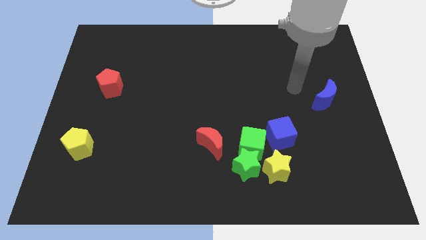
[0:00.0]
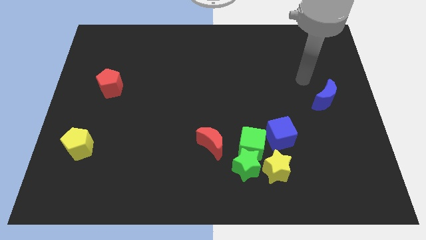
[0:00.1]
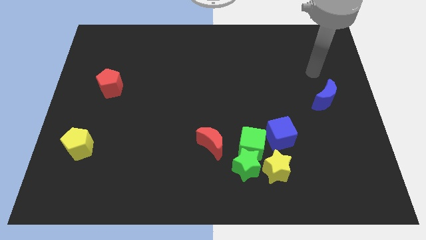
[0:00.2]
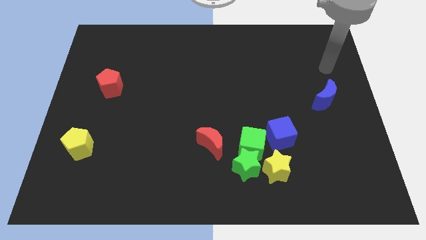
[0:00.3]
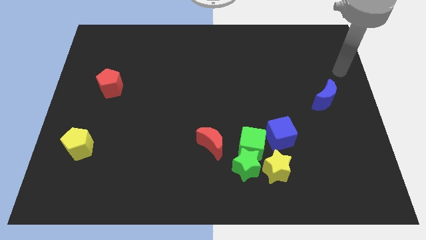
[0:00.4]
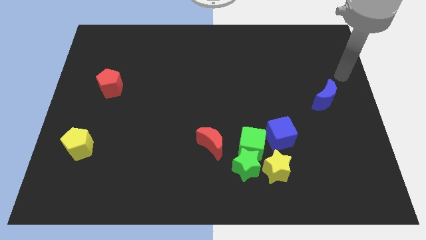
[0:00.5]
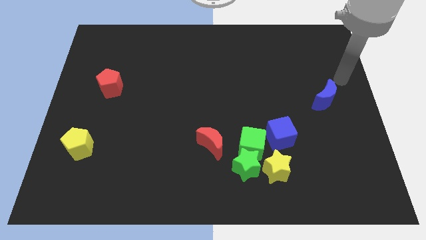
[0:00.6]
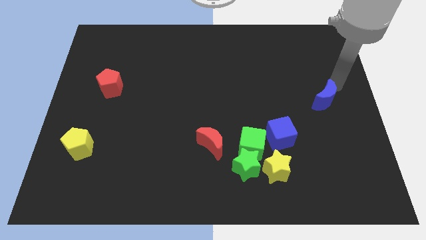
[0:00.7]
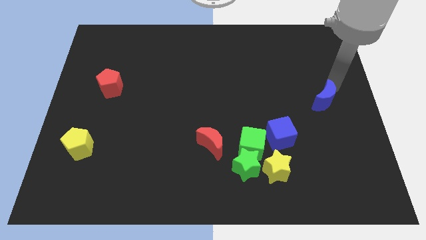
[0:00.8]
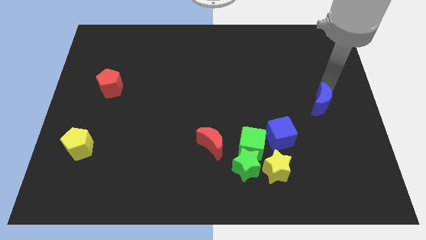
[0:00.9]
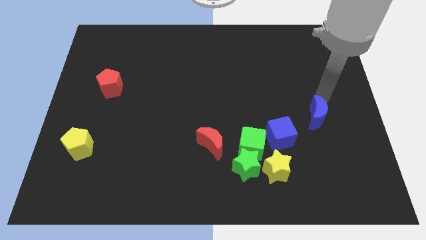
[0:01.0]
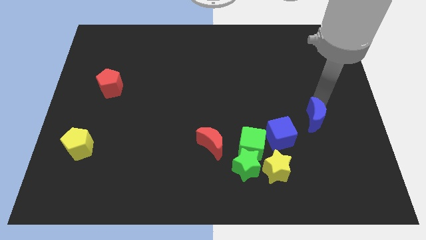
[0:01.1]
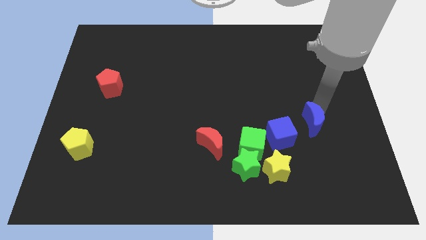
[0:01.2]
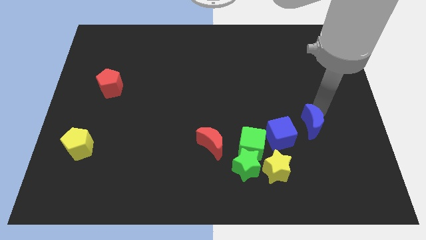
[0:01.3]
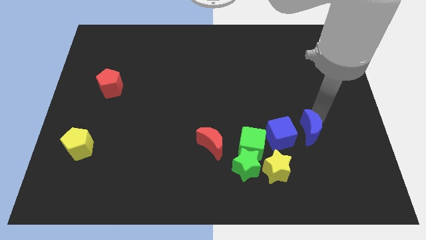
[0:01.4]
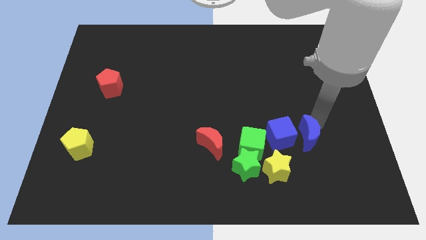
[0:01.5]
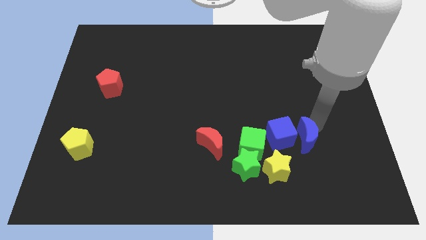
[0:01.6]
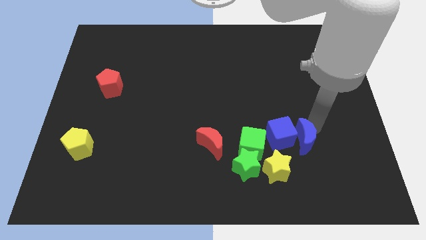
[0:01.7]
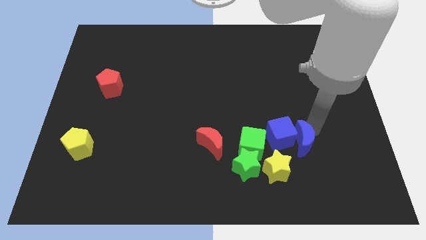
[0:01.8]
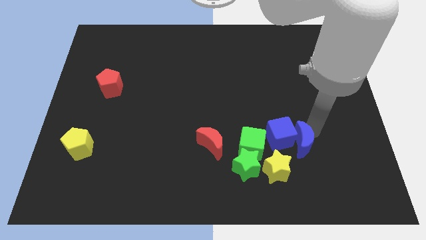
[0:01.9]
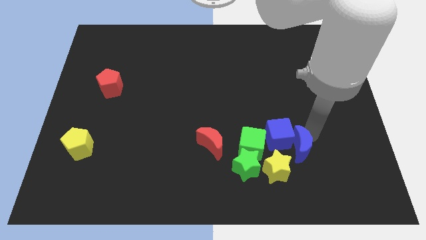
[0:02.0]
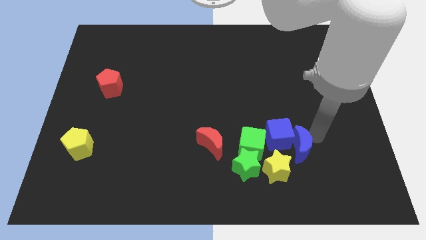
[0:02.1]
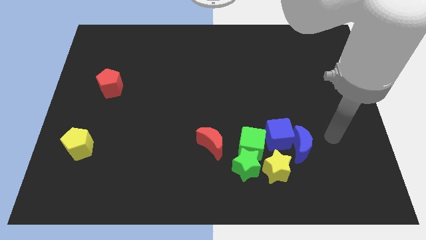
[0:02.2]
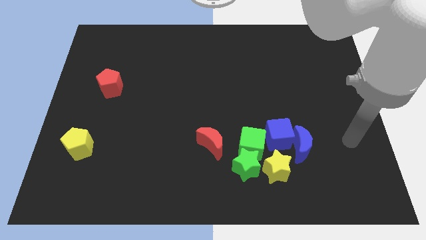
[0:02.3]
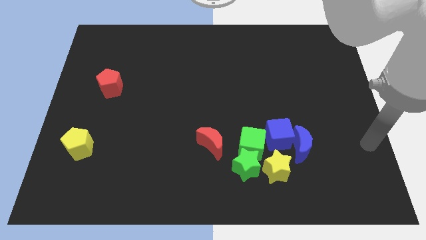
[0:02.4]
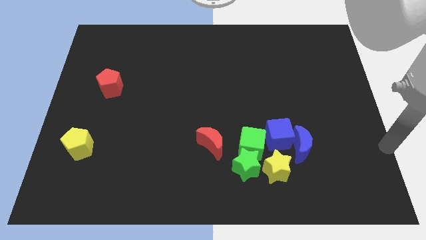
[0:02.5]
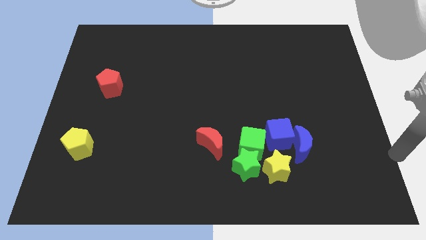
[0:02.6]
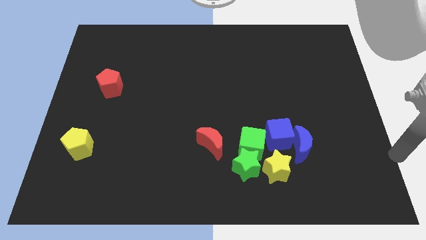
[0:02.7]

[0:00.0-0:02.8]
move blue moon right to blue cube

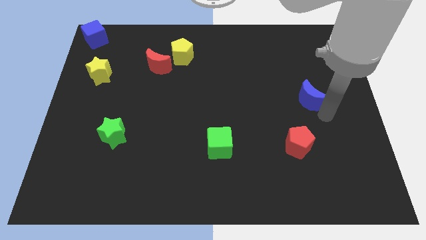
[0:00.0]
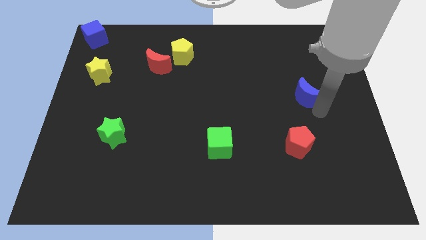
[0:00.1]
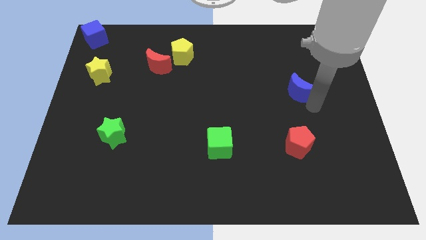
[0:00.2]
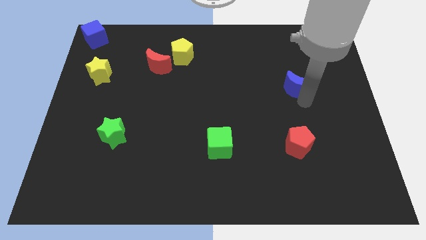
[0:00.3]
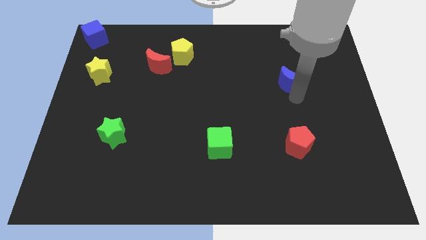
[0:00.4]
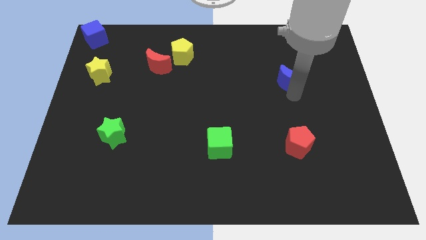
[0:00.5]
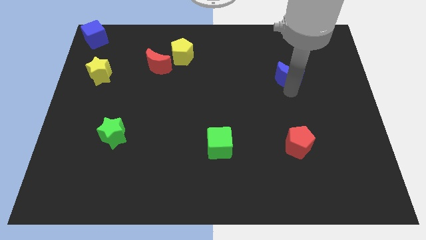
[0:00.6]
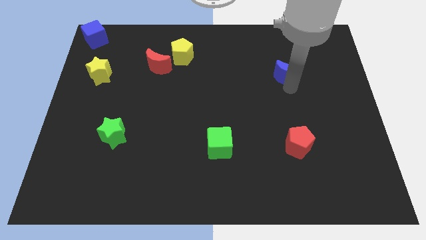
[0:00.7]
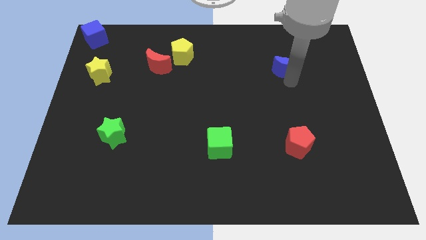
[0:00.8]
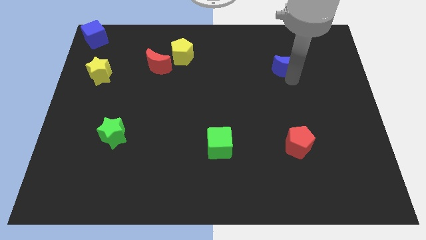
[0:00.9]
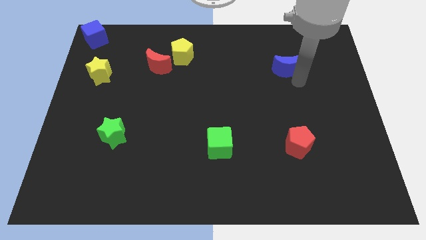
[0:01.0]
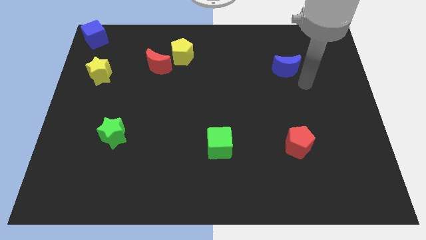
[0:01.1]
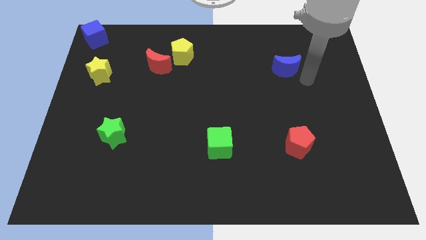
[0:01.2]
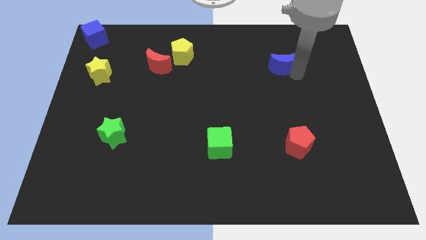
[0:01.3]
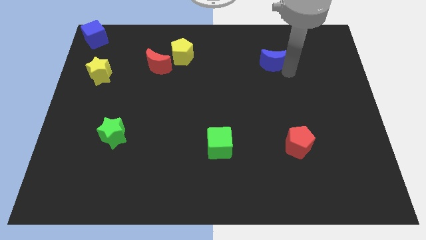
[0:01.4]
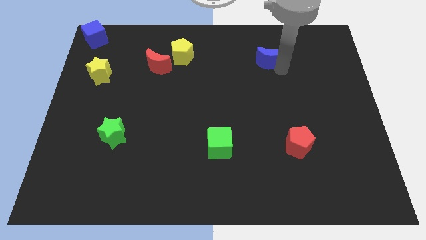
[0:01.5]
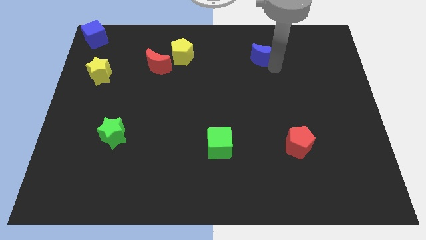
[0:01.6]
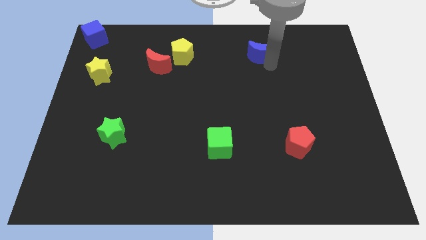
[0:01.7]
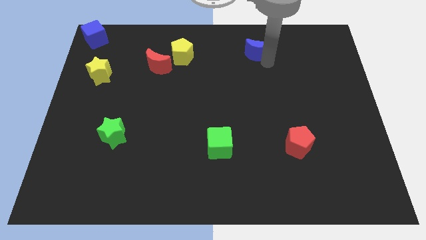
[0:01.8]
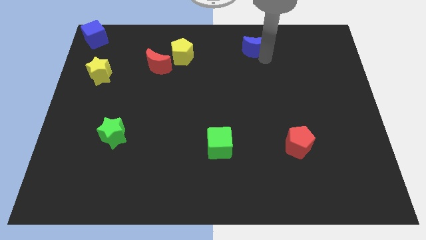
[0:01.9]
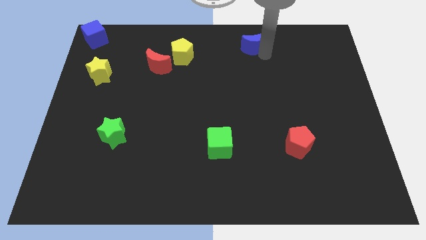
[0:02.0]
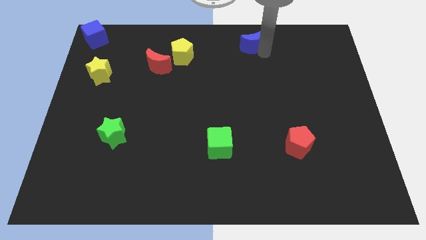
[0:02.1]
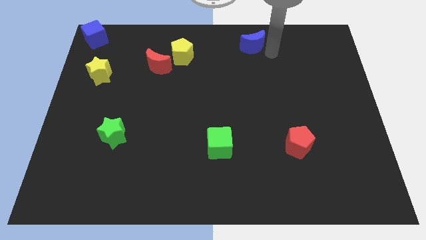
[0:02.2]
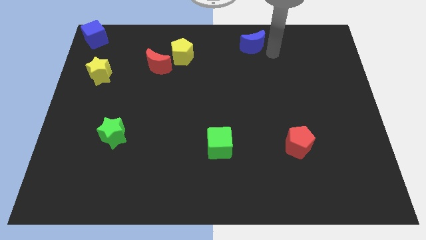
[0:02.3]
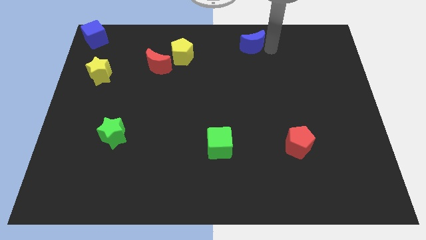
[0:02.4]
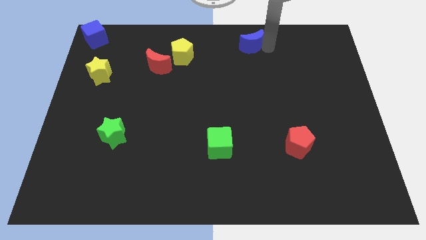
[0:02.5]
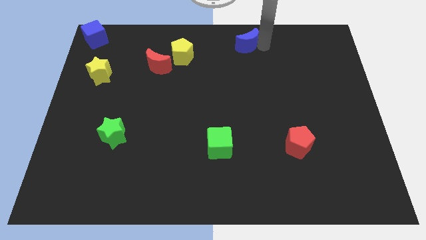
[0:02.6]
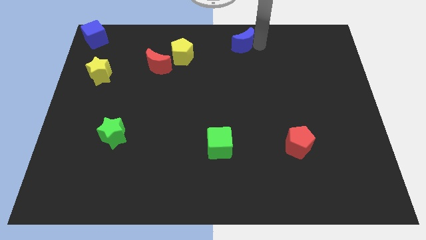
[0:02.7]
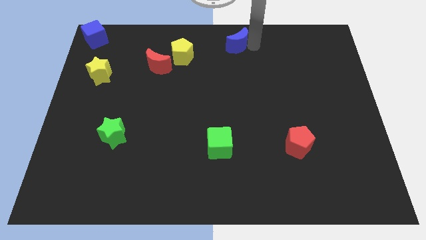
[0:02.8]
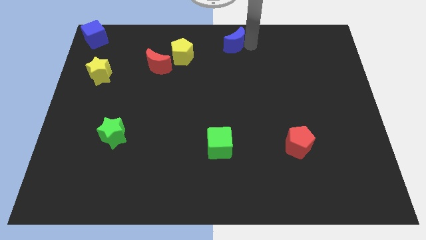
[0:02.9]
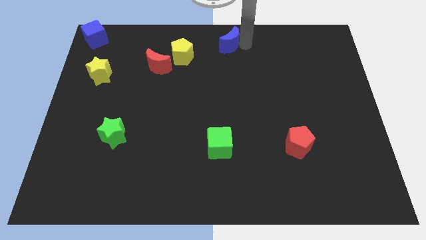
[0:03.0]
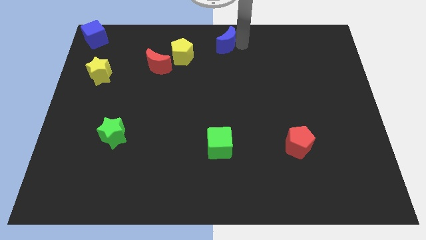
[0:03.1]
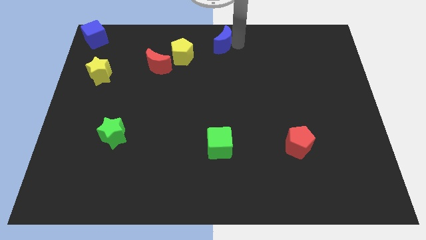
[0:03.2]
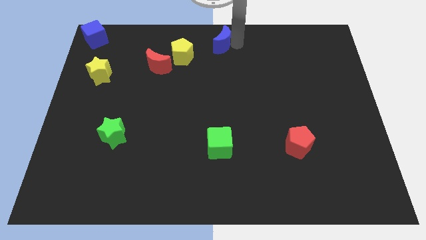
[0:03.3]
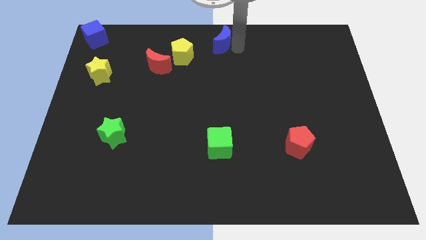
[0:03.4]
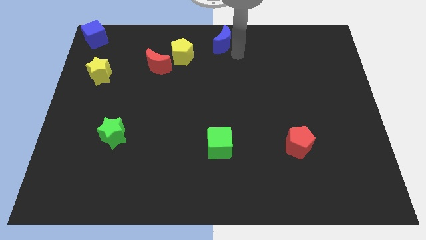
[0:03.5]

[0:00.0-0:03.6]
move the blue crescent to the top centre of the board

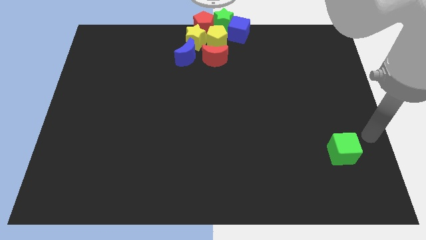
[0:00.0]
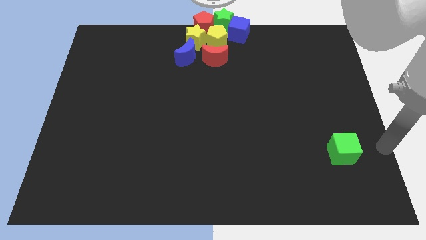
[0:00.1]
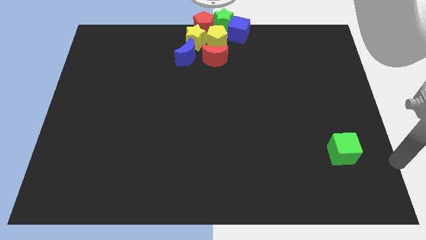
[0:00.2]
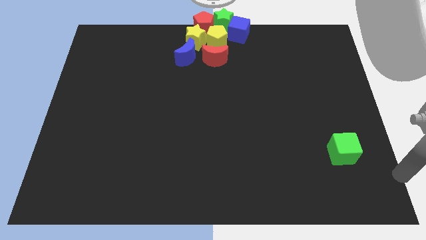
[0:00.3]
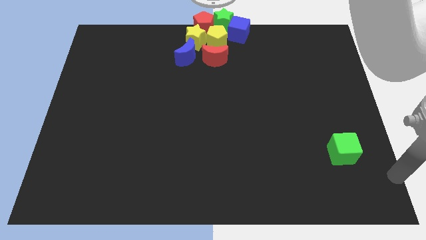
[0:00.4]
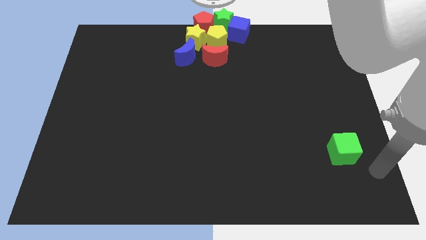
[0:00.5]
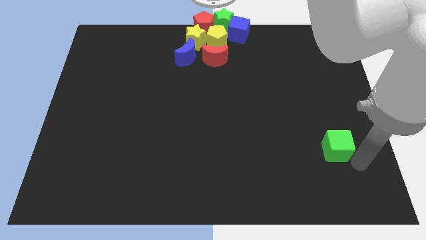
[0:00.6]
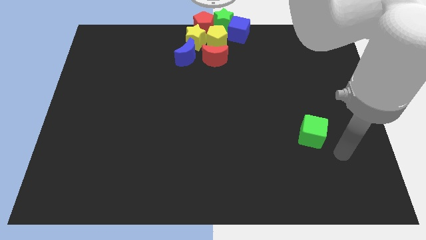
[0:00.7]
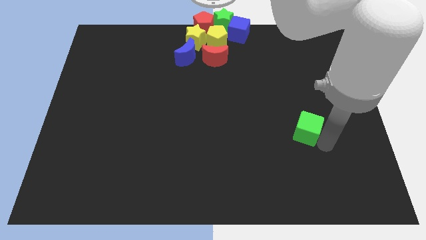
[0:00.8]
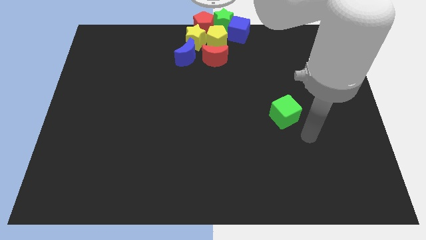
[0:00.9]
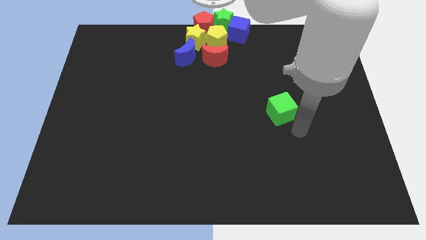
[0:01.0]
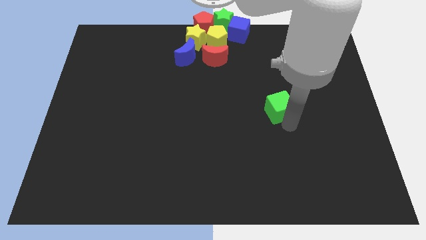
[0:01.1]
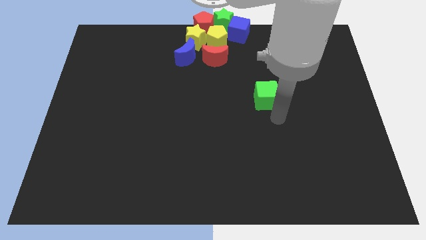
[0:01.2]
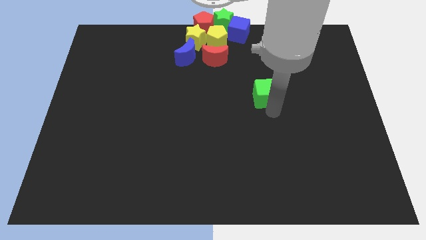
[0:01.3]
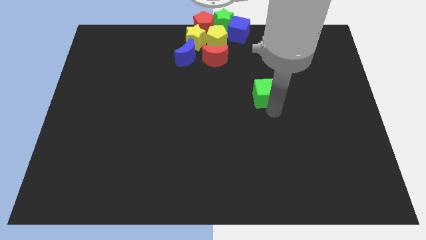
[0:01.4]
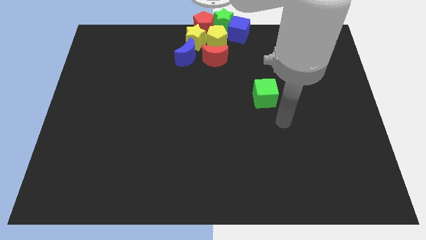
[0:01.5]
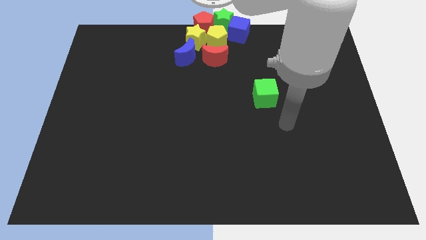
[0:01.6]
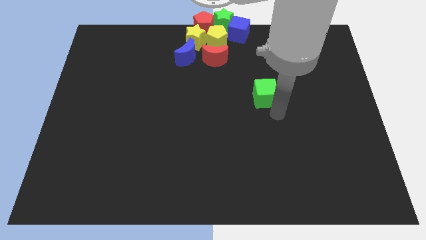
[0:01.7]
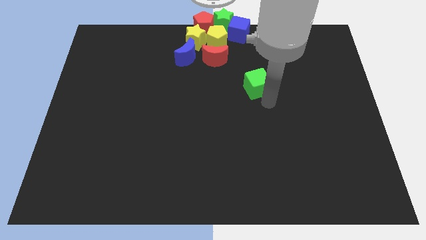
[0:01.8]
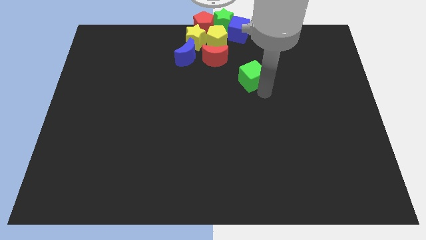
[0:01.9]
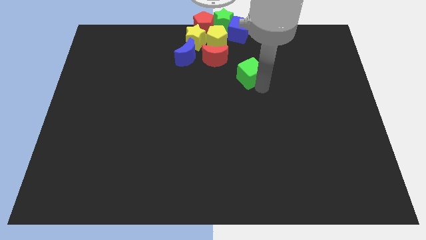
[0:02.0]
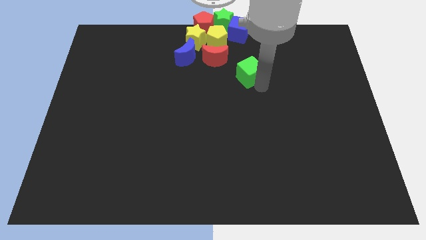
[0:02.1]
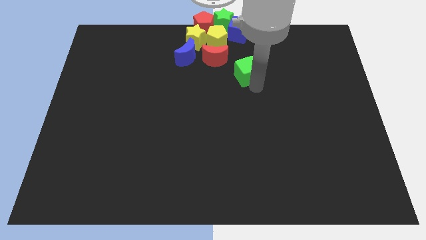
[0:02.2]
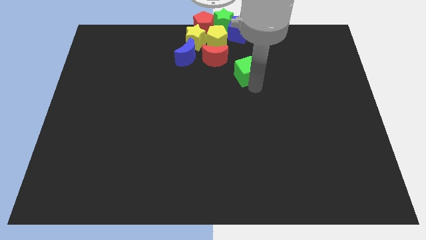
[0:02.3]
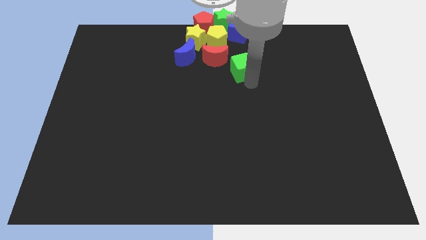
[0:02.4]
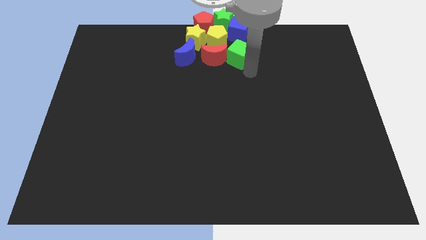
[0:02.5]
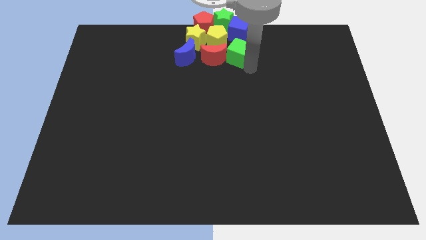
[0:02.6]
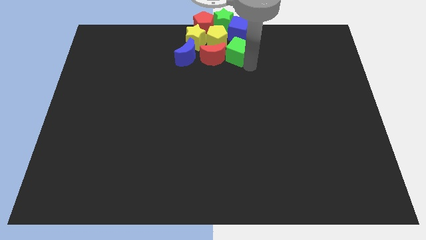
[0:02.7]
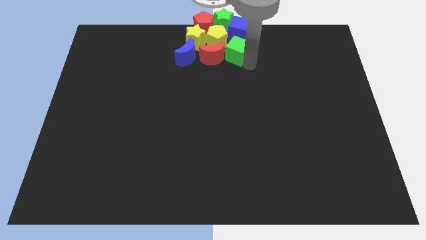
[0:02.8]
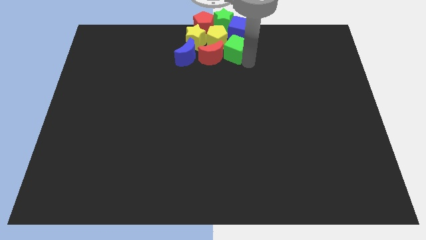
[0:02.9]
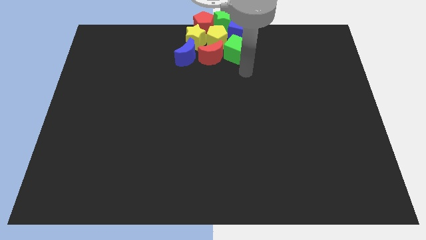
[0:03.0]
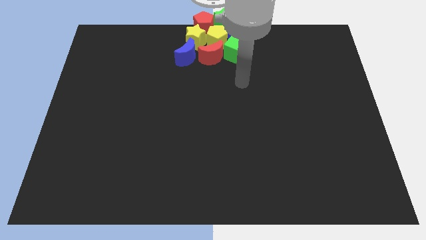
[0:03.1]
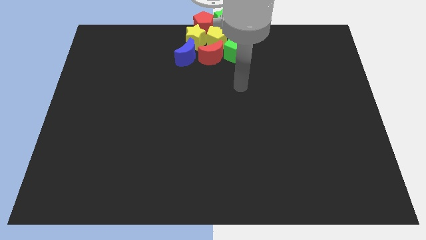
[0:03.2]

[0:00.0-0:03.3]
add the green cube to the group of blocks
